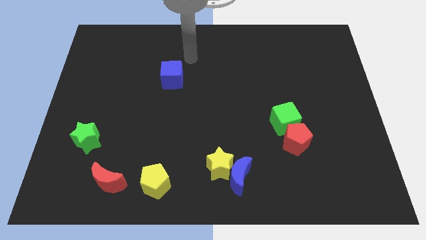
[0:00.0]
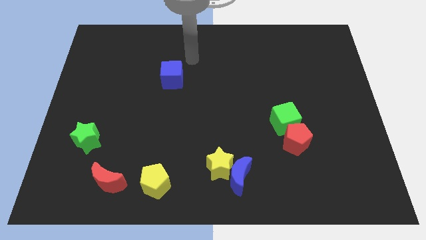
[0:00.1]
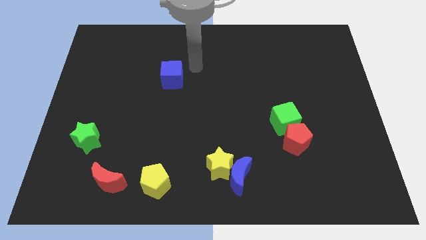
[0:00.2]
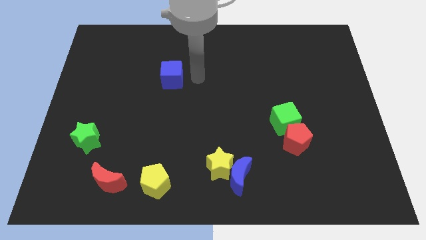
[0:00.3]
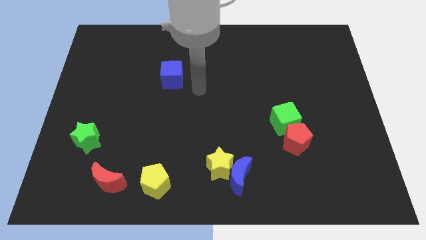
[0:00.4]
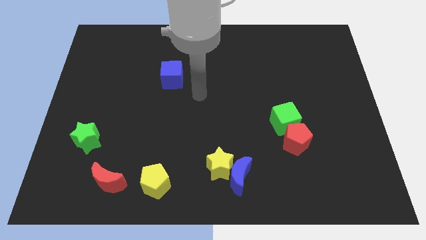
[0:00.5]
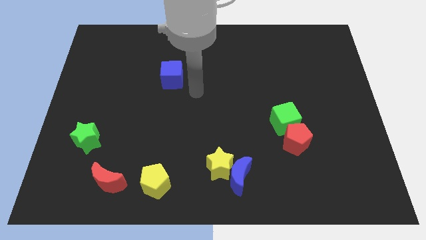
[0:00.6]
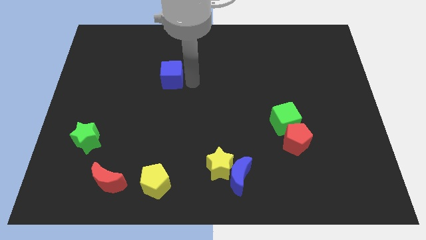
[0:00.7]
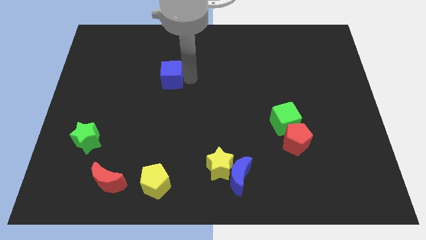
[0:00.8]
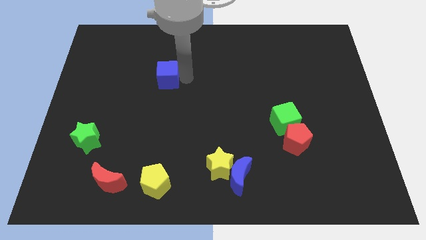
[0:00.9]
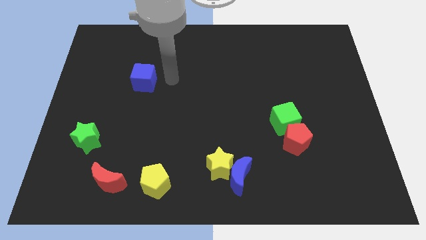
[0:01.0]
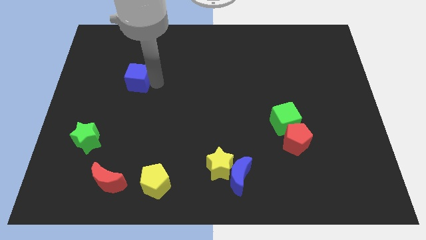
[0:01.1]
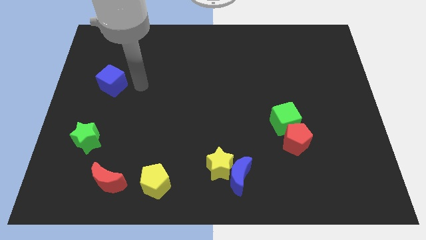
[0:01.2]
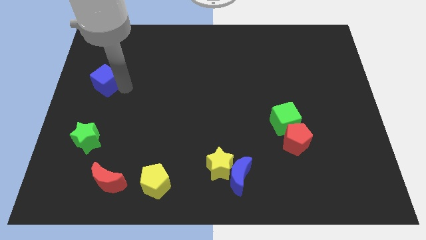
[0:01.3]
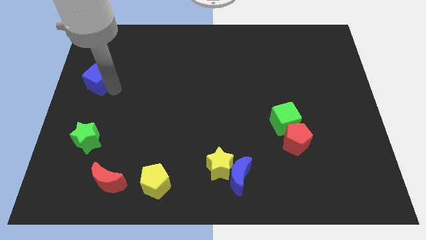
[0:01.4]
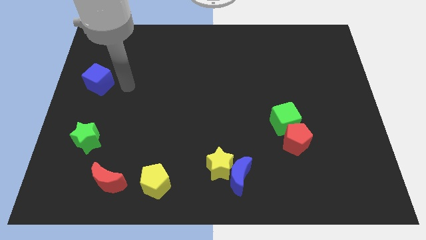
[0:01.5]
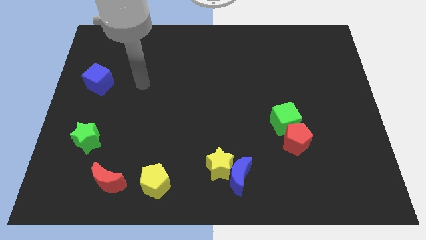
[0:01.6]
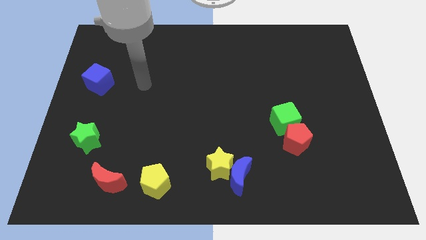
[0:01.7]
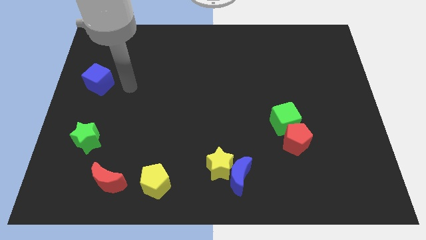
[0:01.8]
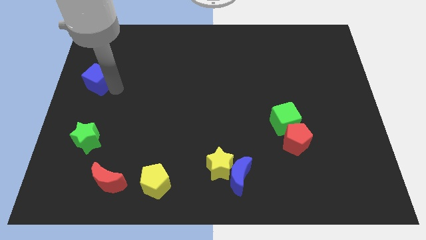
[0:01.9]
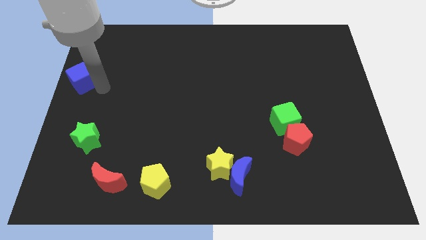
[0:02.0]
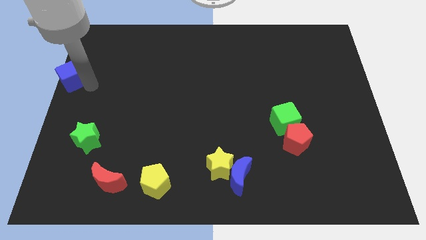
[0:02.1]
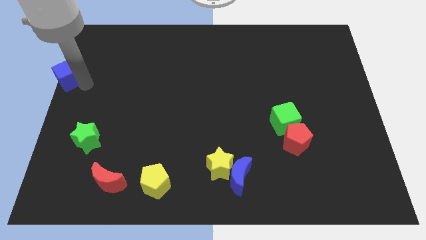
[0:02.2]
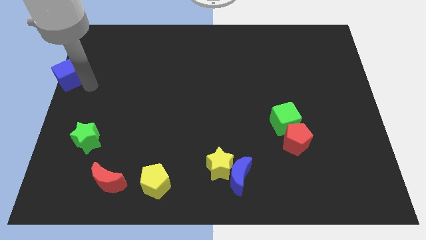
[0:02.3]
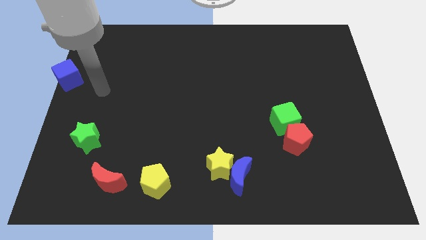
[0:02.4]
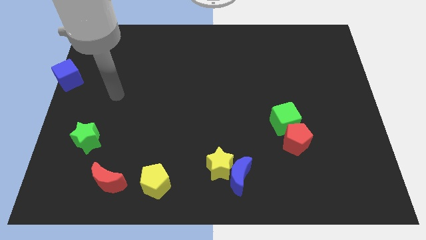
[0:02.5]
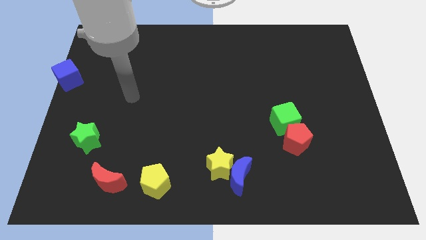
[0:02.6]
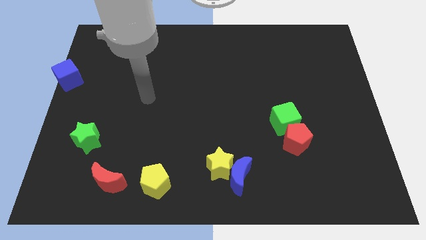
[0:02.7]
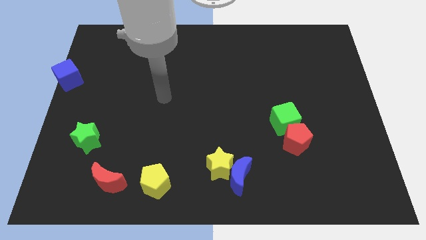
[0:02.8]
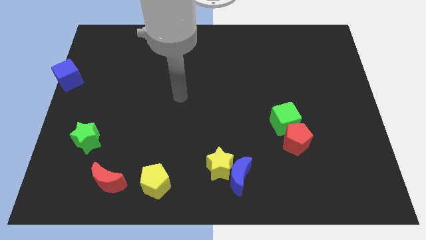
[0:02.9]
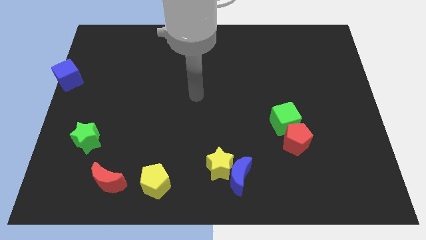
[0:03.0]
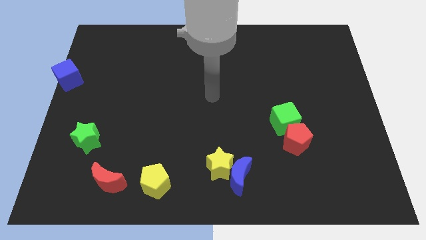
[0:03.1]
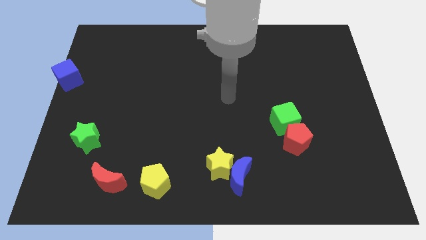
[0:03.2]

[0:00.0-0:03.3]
move the blue cube to the left side of the board

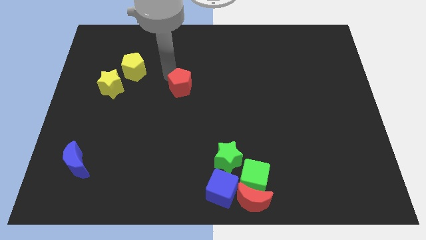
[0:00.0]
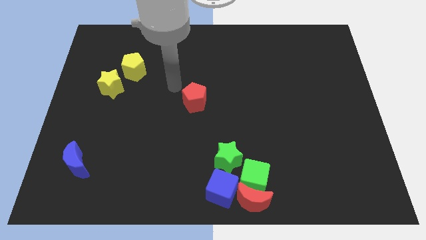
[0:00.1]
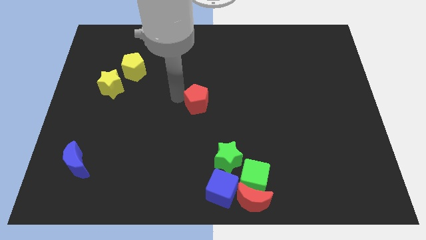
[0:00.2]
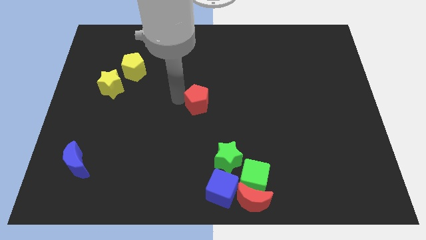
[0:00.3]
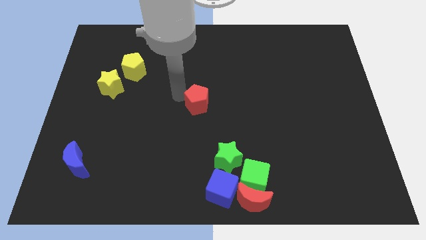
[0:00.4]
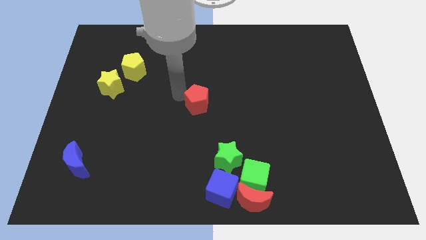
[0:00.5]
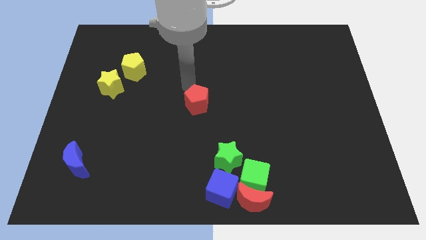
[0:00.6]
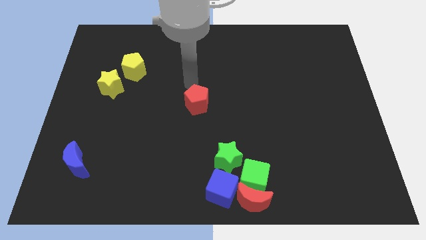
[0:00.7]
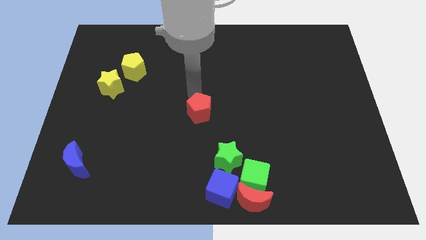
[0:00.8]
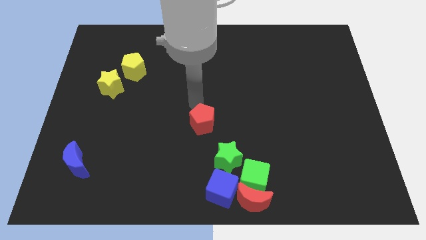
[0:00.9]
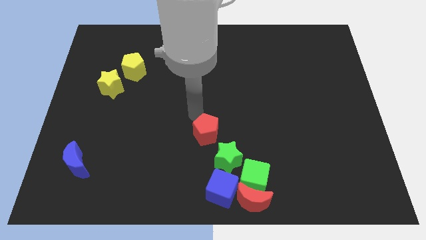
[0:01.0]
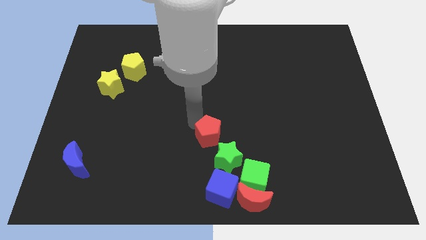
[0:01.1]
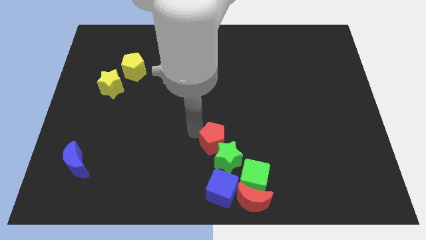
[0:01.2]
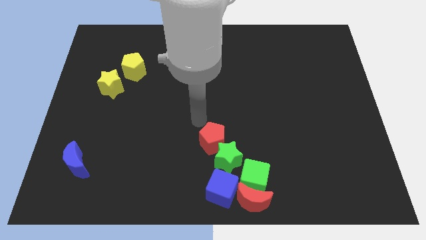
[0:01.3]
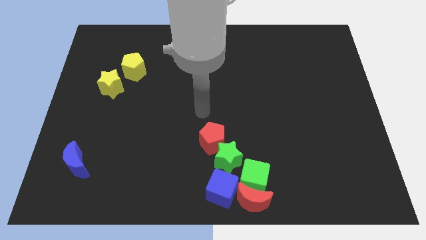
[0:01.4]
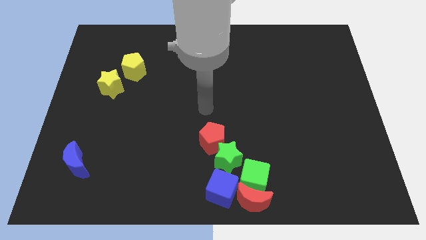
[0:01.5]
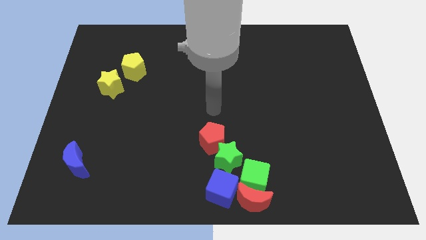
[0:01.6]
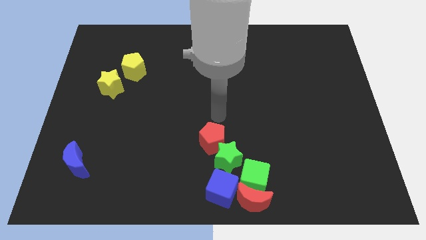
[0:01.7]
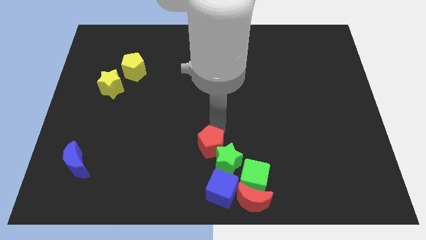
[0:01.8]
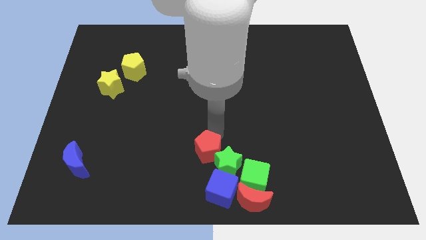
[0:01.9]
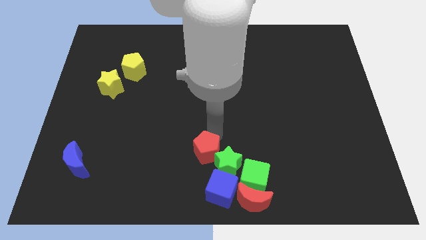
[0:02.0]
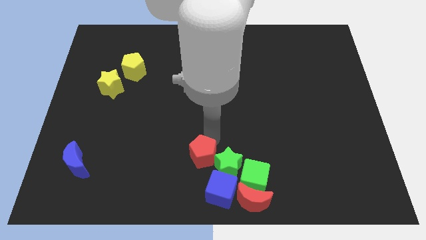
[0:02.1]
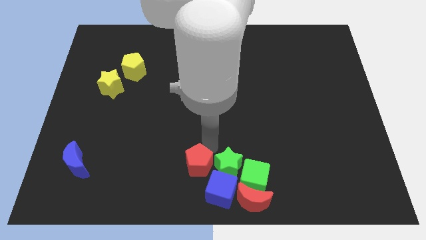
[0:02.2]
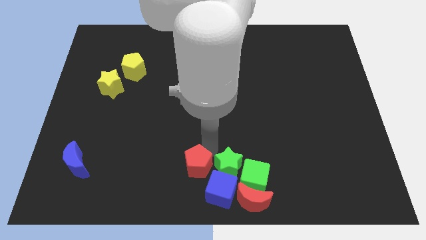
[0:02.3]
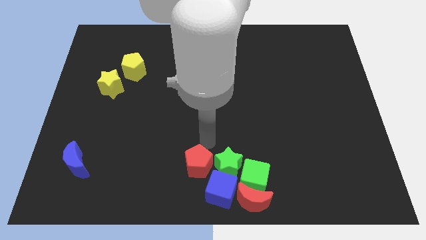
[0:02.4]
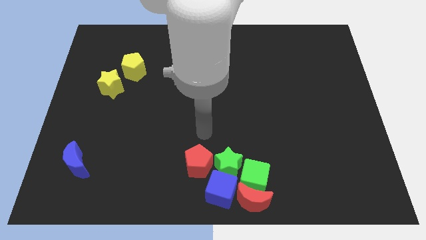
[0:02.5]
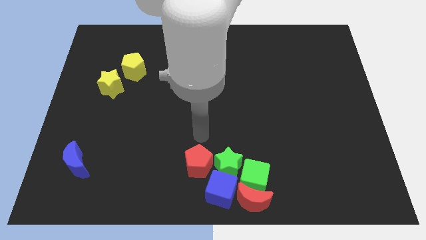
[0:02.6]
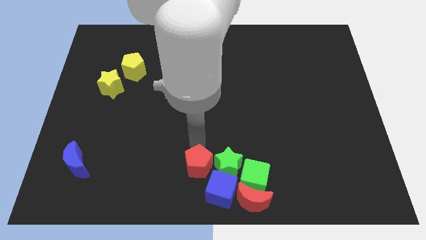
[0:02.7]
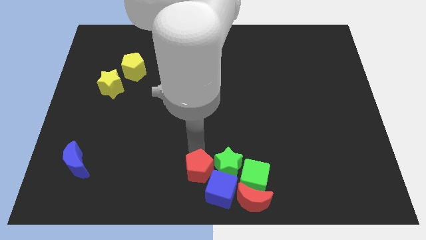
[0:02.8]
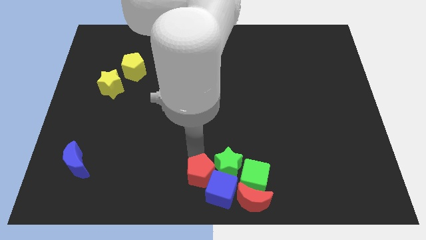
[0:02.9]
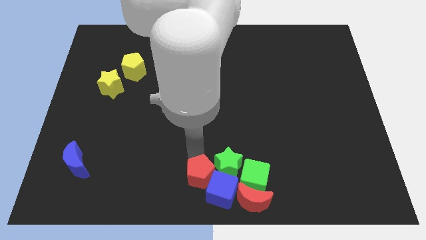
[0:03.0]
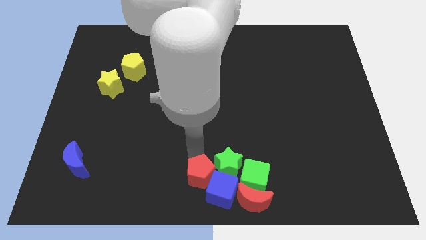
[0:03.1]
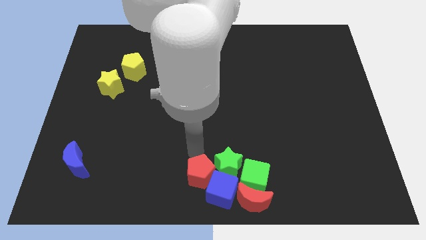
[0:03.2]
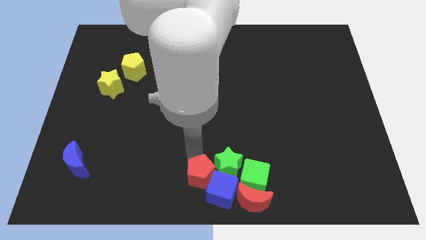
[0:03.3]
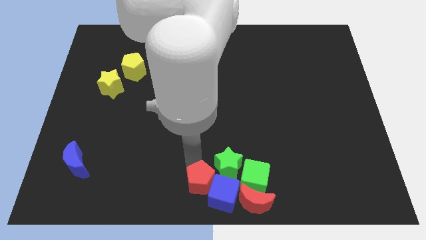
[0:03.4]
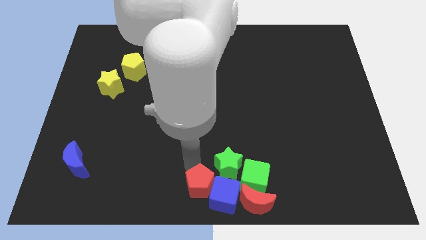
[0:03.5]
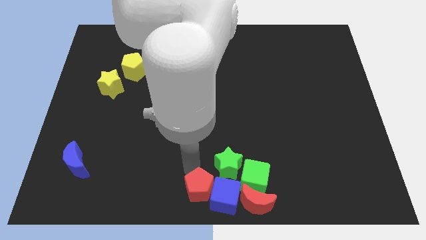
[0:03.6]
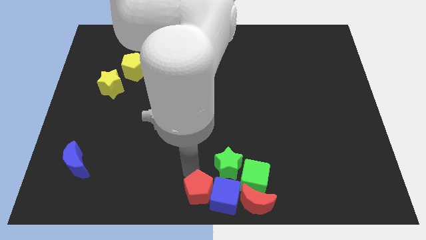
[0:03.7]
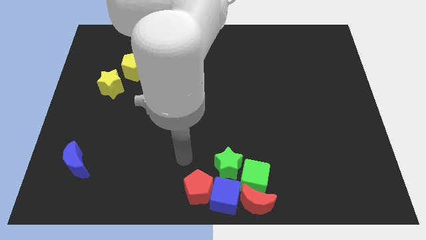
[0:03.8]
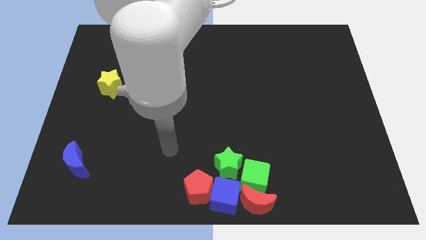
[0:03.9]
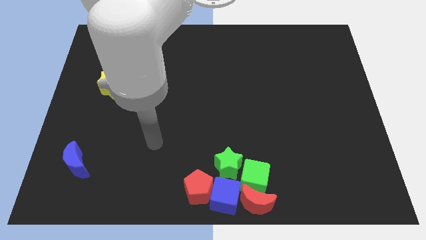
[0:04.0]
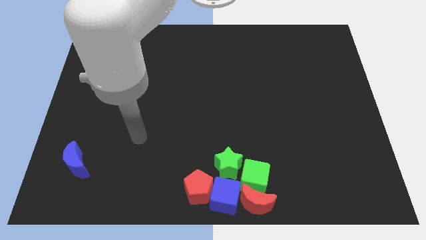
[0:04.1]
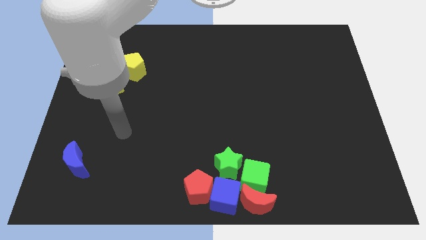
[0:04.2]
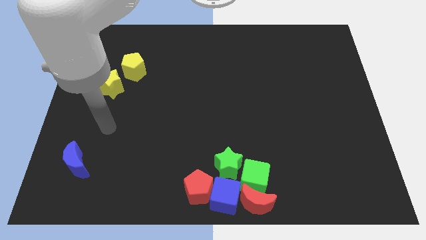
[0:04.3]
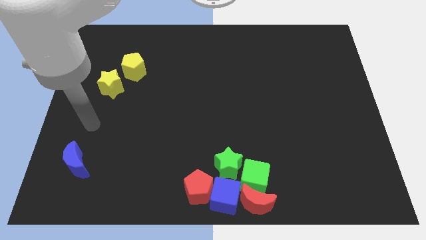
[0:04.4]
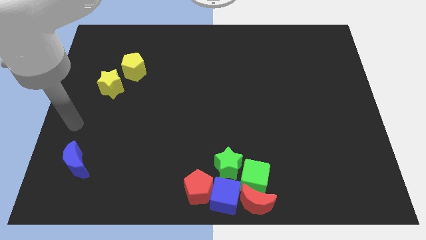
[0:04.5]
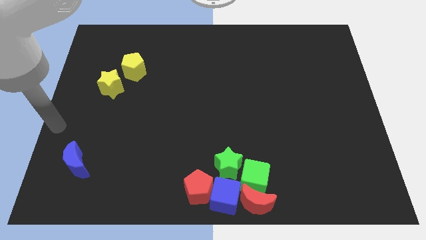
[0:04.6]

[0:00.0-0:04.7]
move the red pentagon near to the blue cube

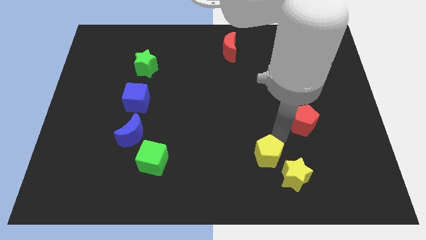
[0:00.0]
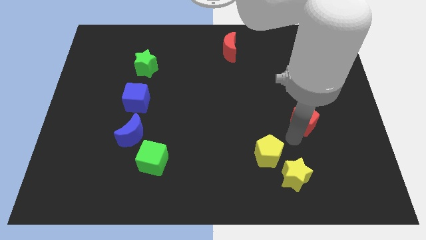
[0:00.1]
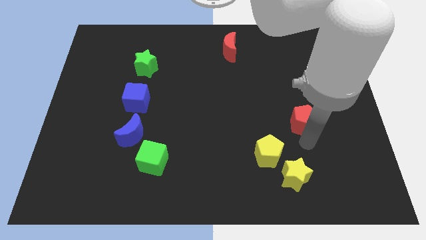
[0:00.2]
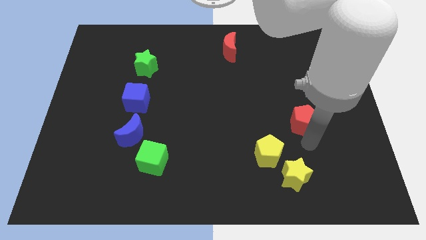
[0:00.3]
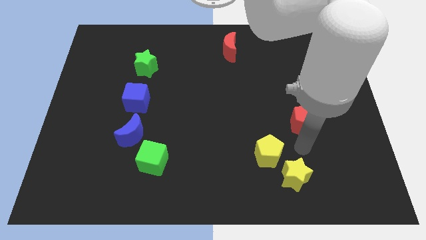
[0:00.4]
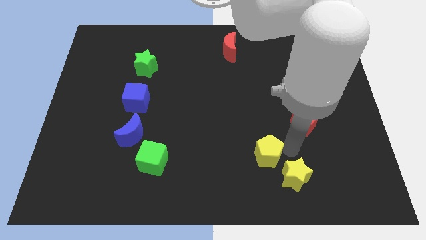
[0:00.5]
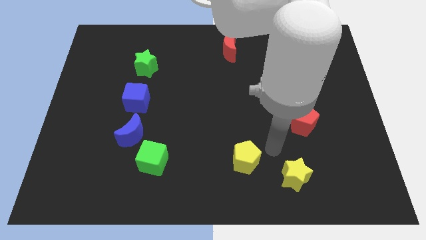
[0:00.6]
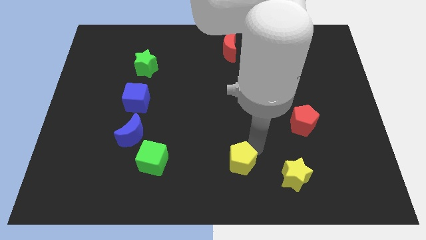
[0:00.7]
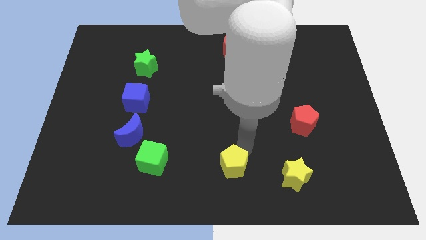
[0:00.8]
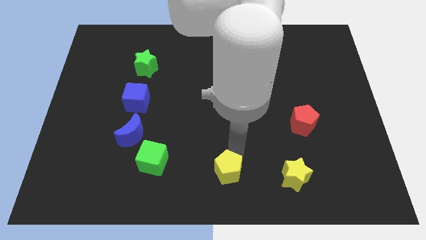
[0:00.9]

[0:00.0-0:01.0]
slightly move the yellow pentagon towards the left of the yellow star

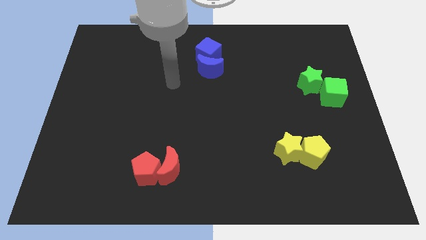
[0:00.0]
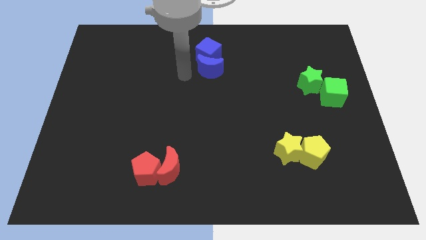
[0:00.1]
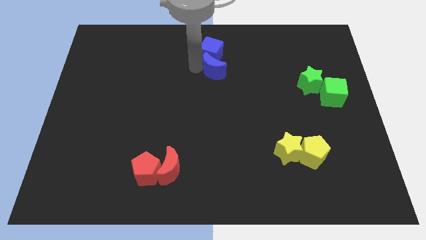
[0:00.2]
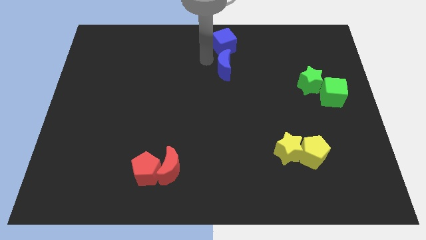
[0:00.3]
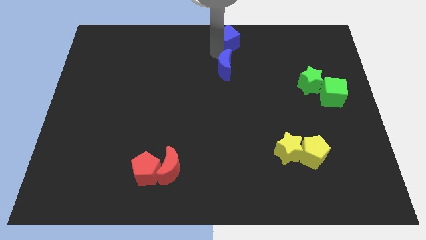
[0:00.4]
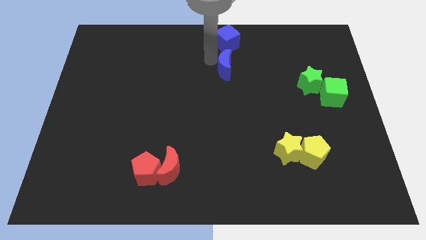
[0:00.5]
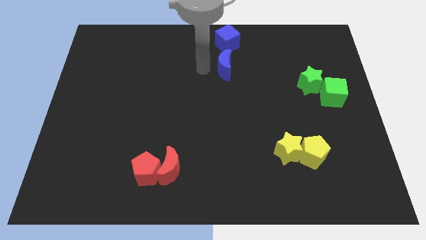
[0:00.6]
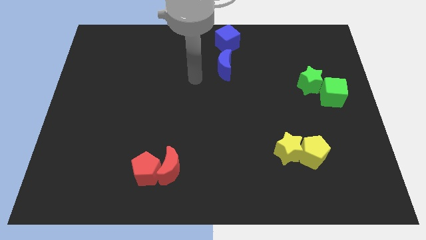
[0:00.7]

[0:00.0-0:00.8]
separate the group of blue blocks
